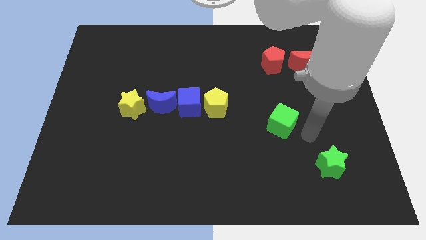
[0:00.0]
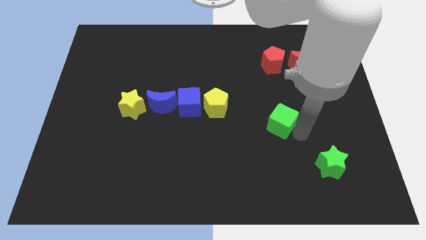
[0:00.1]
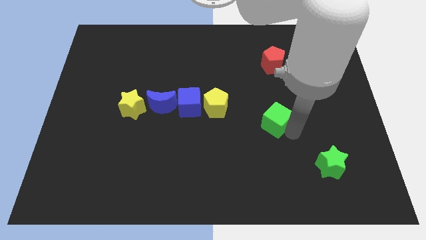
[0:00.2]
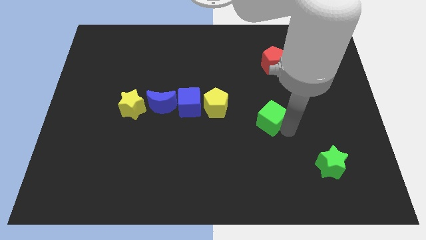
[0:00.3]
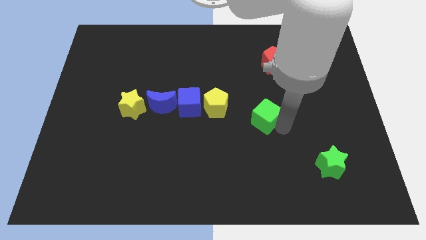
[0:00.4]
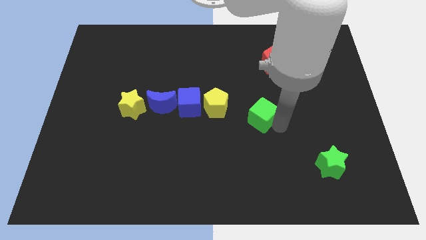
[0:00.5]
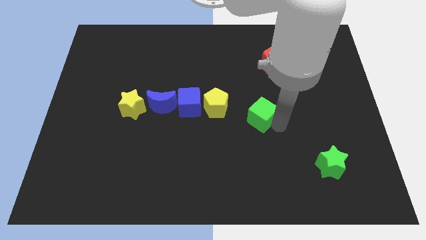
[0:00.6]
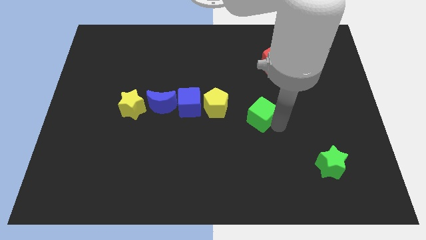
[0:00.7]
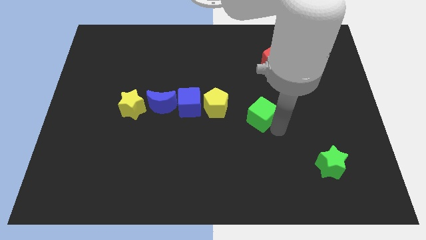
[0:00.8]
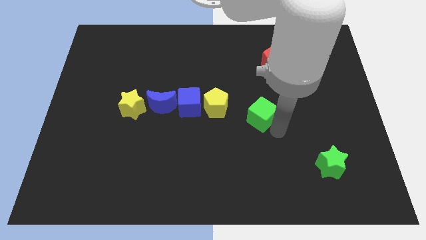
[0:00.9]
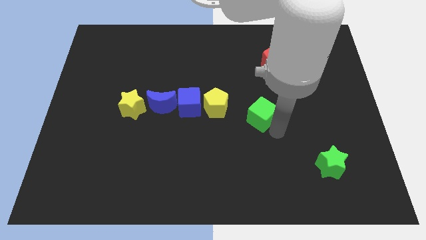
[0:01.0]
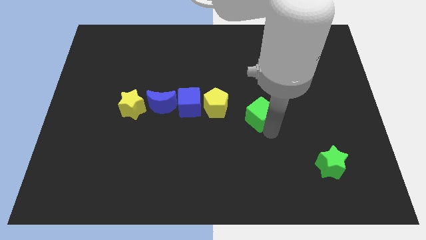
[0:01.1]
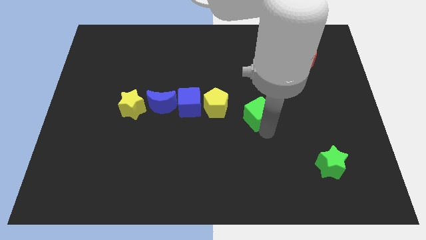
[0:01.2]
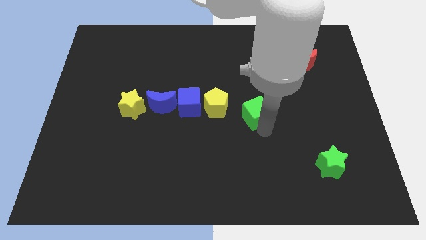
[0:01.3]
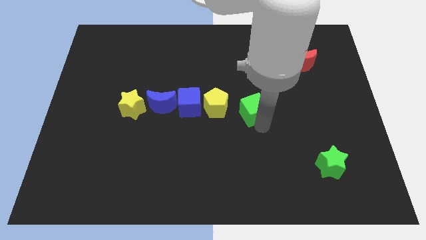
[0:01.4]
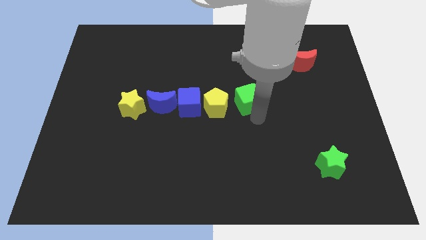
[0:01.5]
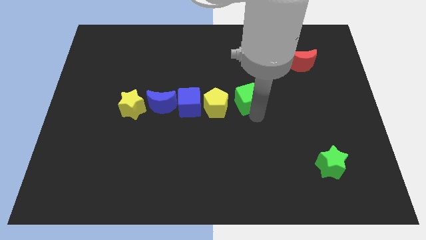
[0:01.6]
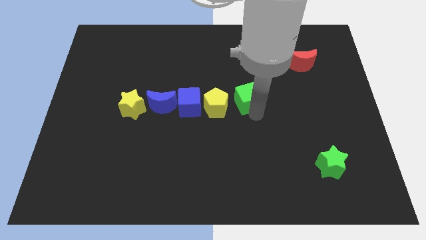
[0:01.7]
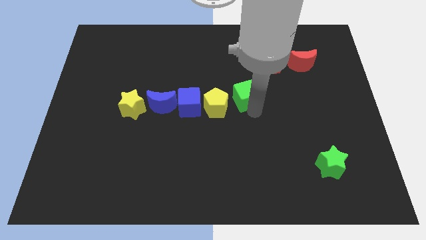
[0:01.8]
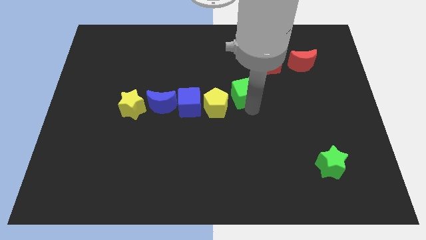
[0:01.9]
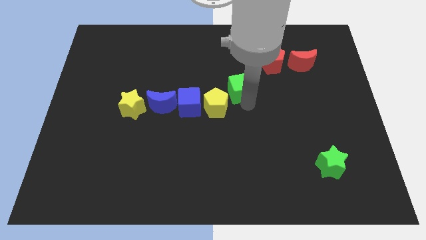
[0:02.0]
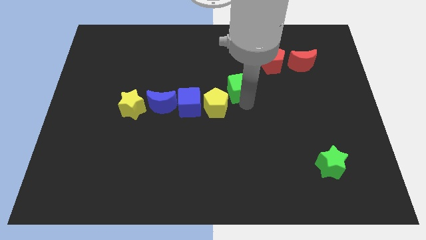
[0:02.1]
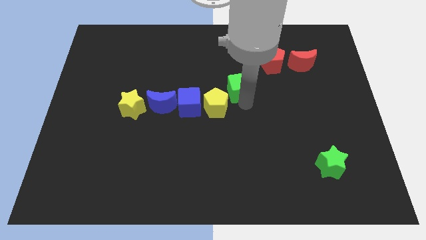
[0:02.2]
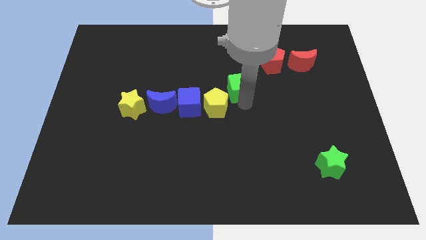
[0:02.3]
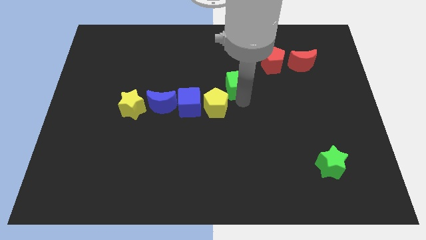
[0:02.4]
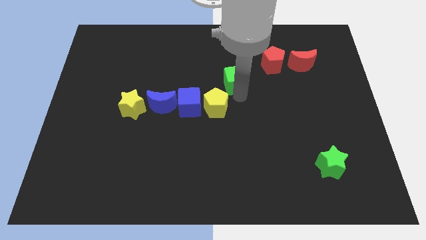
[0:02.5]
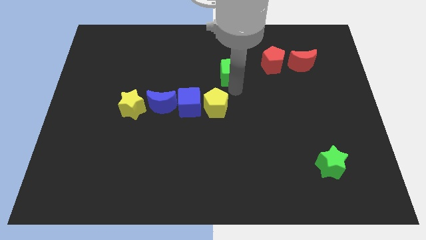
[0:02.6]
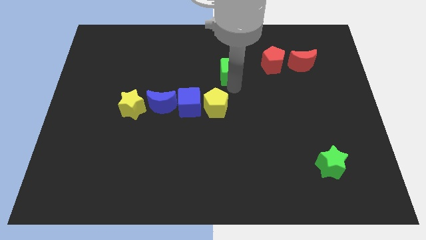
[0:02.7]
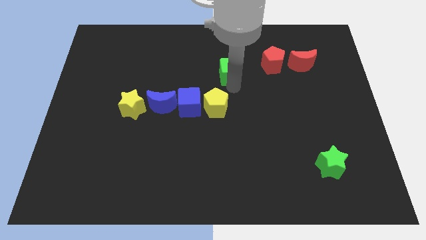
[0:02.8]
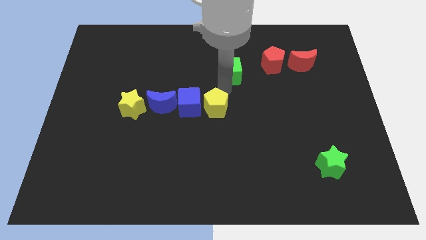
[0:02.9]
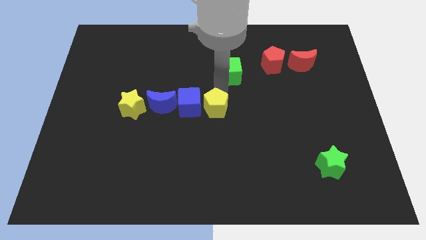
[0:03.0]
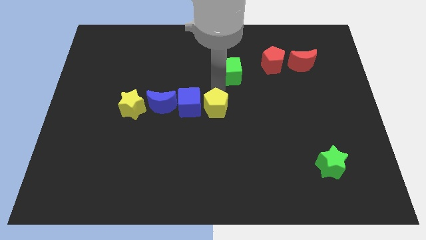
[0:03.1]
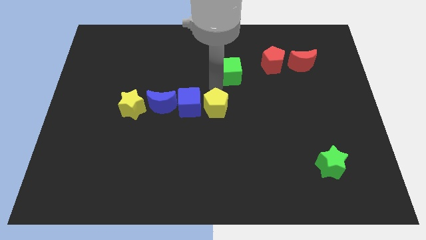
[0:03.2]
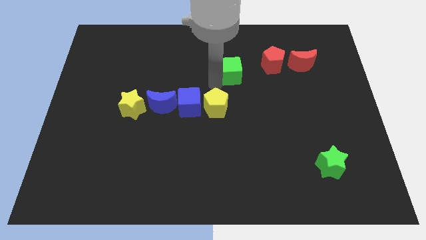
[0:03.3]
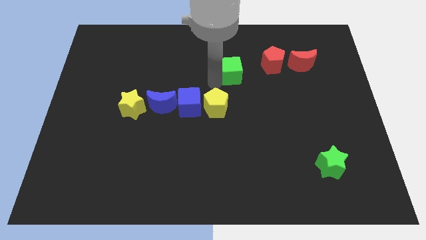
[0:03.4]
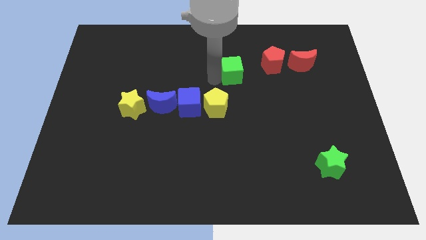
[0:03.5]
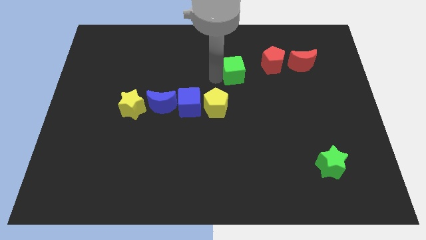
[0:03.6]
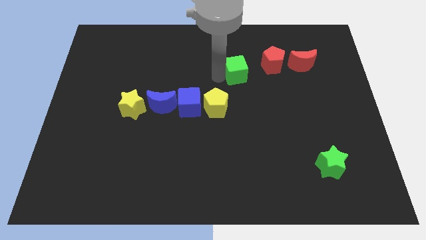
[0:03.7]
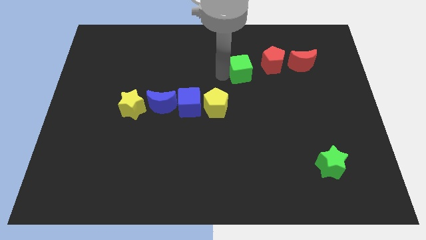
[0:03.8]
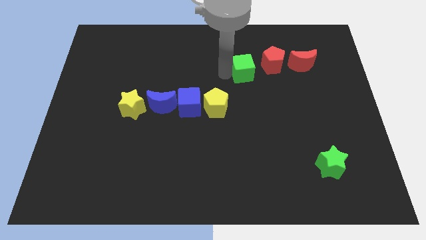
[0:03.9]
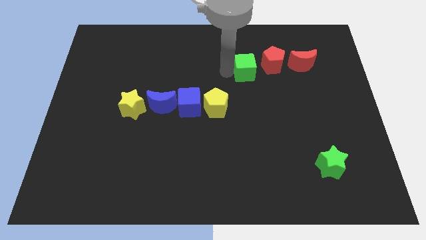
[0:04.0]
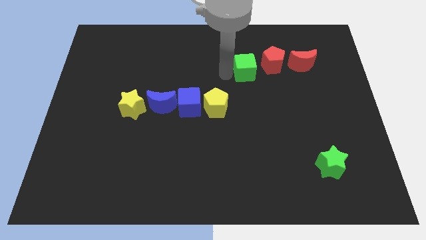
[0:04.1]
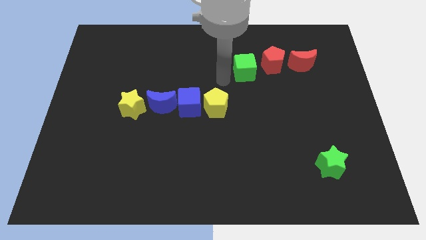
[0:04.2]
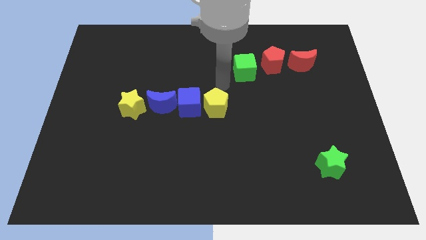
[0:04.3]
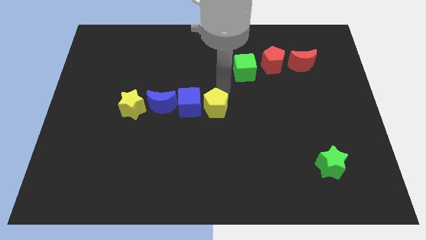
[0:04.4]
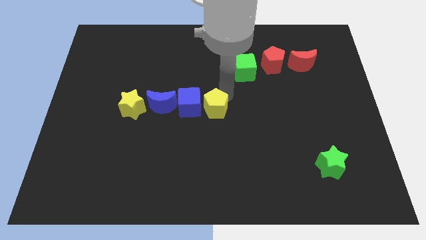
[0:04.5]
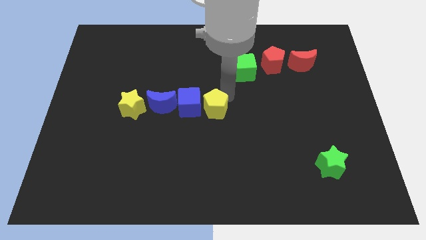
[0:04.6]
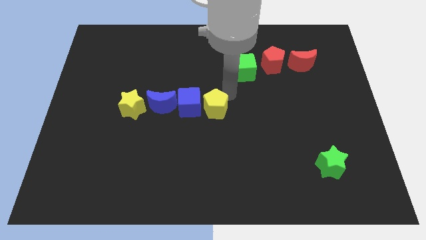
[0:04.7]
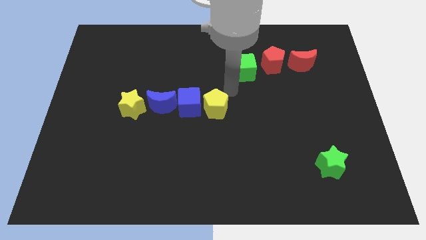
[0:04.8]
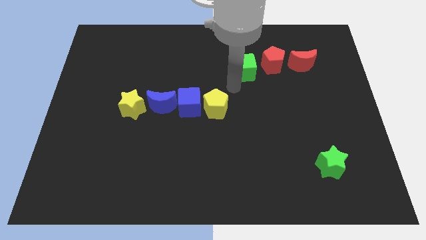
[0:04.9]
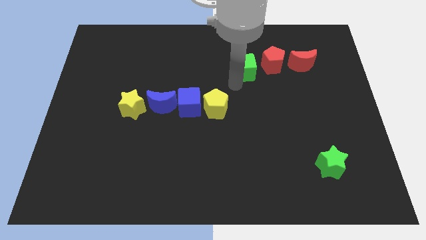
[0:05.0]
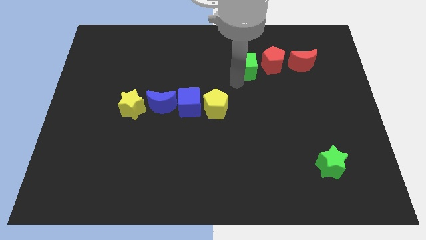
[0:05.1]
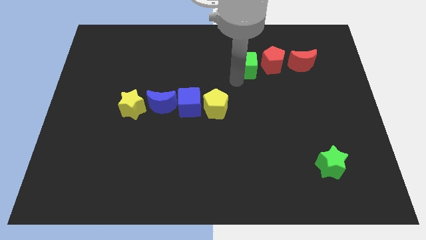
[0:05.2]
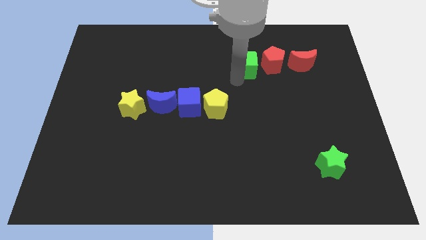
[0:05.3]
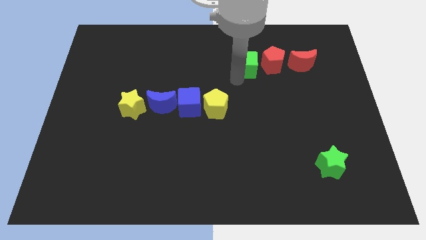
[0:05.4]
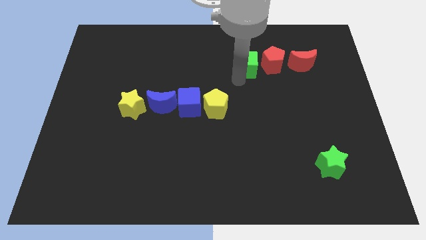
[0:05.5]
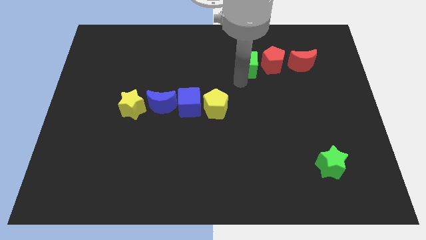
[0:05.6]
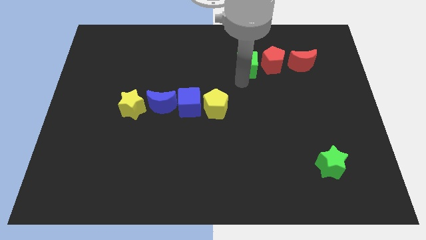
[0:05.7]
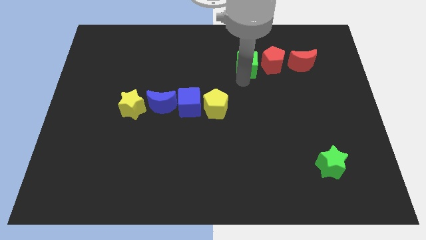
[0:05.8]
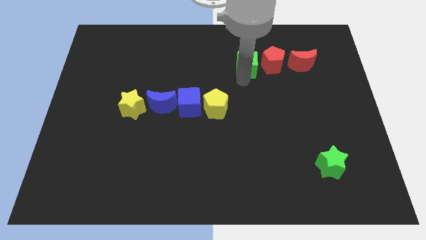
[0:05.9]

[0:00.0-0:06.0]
move the green cube on the left side of the red pentagon

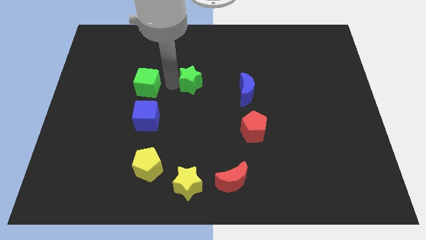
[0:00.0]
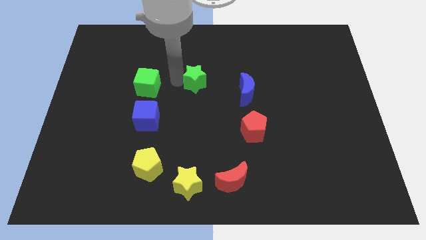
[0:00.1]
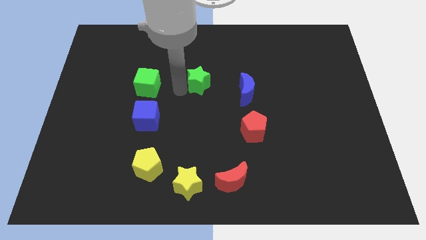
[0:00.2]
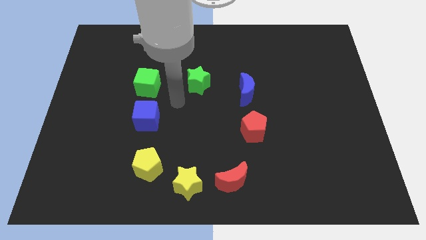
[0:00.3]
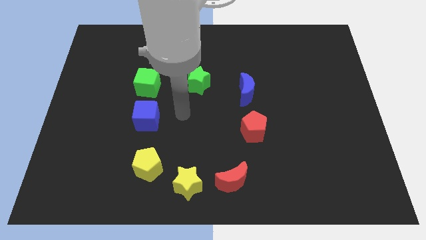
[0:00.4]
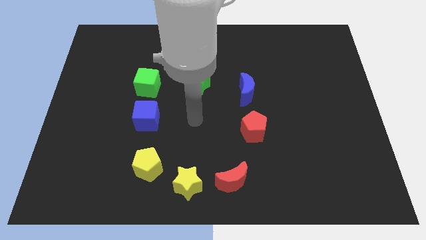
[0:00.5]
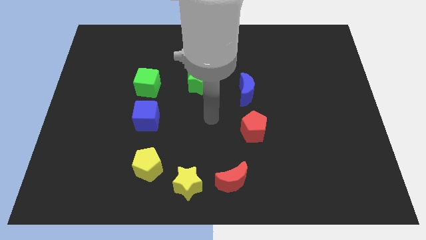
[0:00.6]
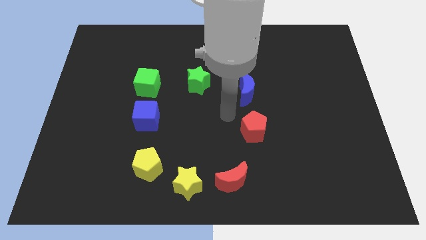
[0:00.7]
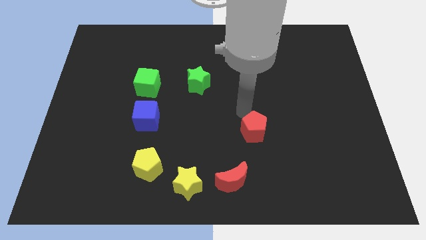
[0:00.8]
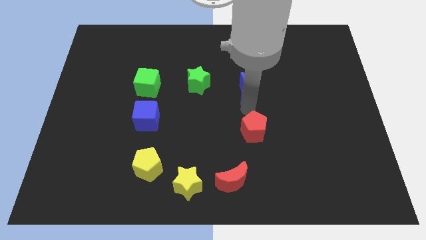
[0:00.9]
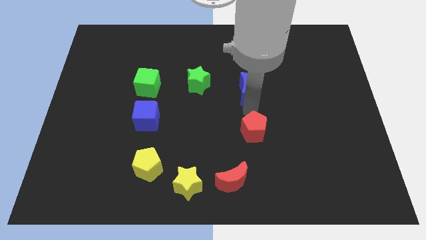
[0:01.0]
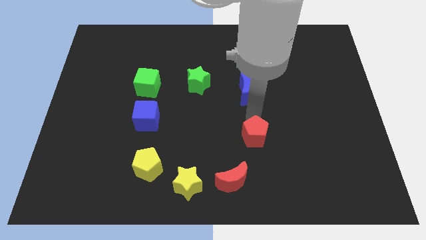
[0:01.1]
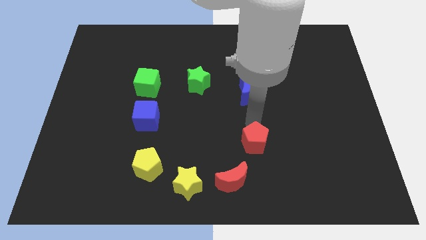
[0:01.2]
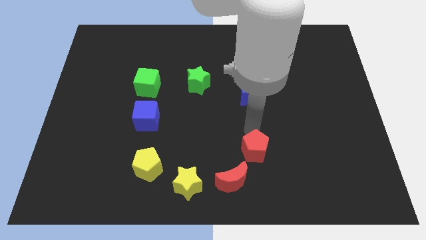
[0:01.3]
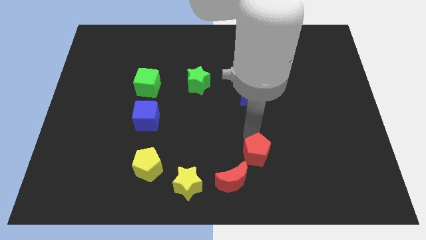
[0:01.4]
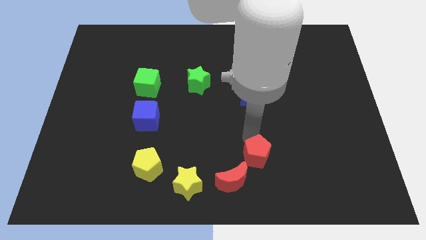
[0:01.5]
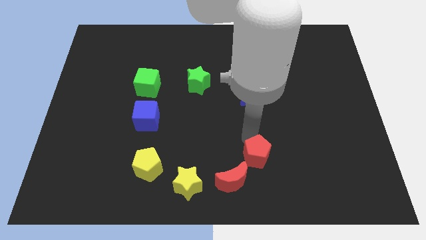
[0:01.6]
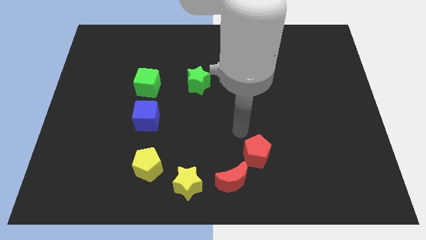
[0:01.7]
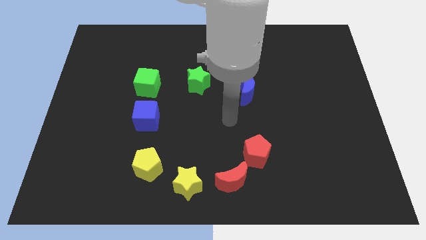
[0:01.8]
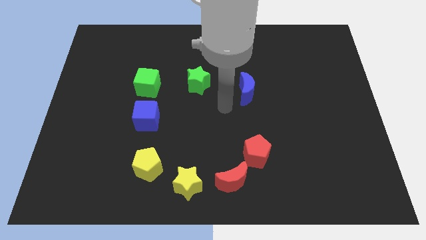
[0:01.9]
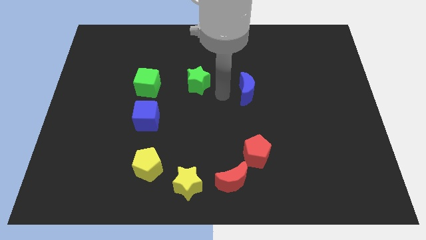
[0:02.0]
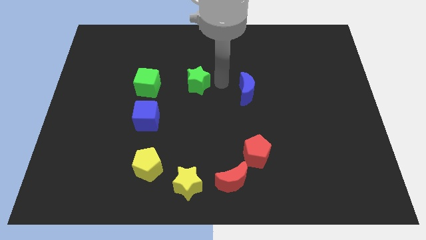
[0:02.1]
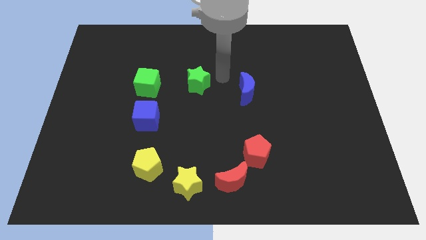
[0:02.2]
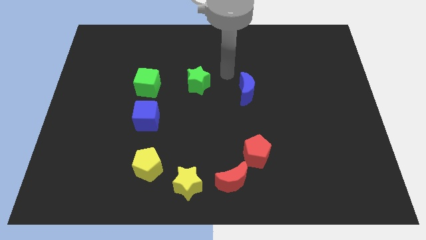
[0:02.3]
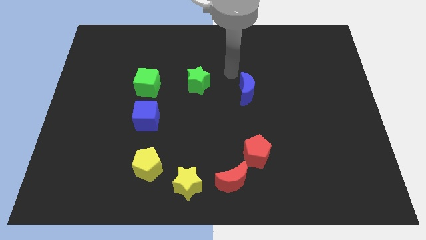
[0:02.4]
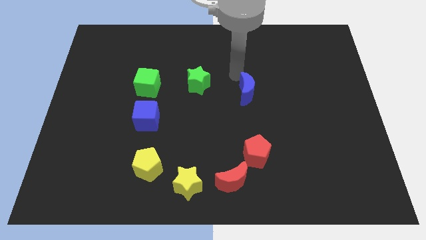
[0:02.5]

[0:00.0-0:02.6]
place red pentagon into red moon

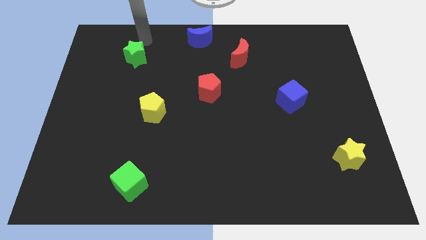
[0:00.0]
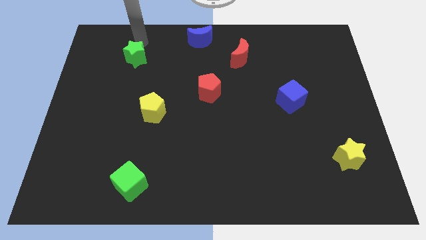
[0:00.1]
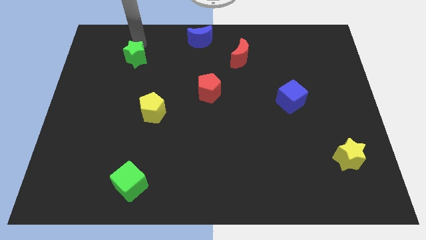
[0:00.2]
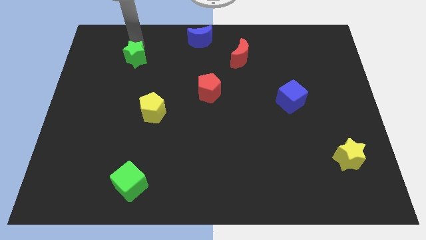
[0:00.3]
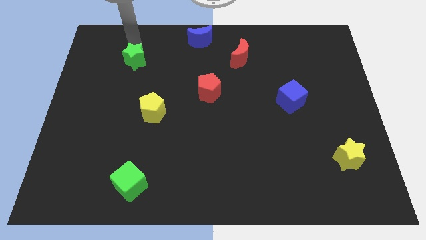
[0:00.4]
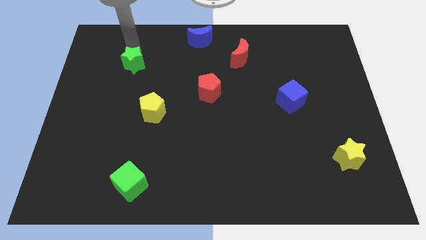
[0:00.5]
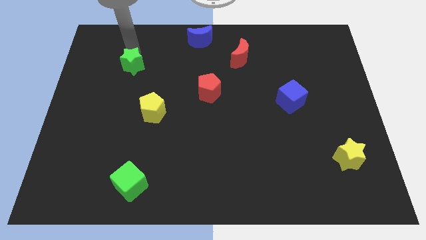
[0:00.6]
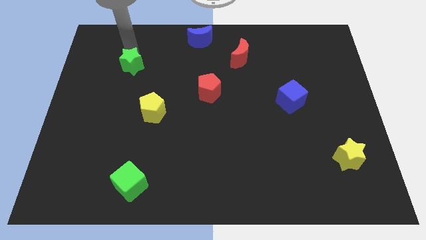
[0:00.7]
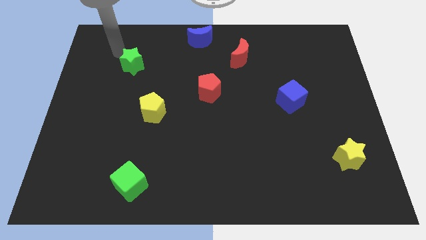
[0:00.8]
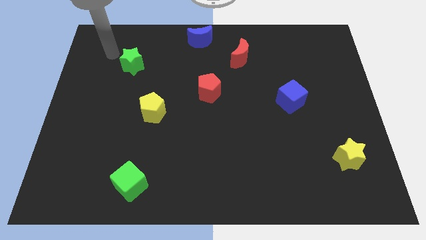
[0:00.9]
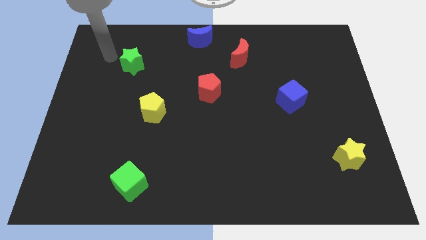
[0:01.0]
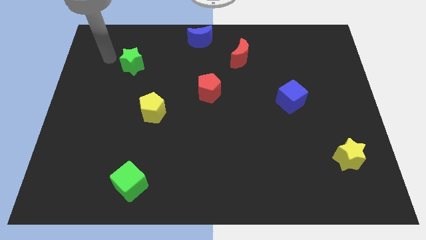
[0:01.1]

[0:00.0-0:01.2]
push green star to the center
